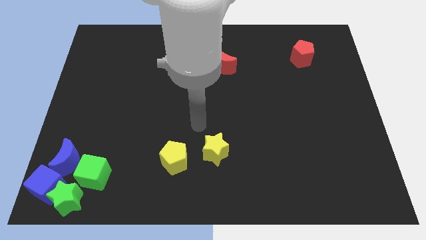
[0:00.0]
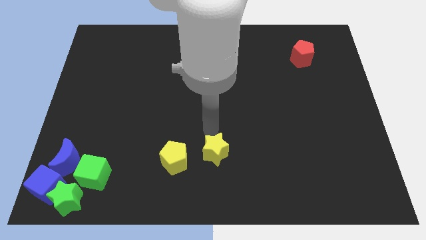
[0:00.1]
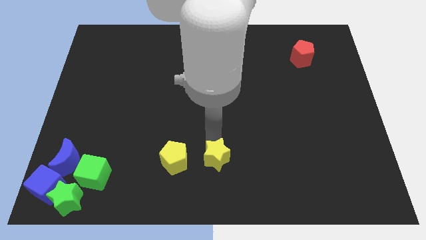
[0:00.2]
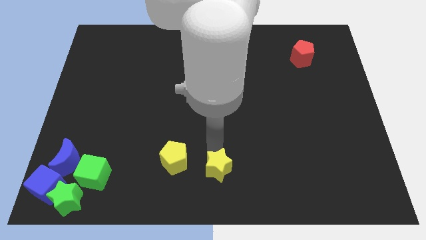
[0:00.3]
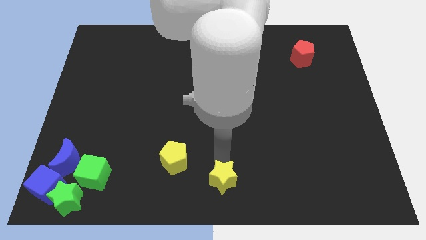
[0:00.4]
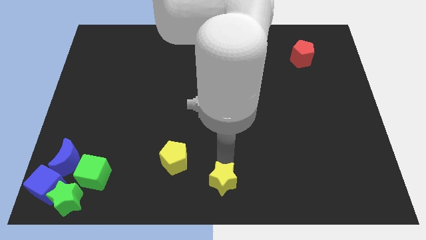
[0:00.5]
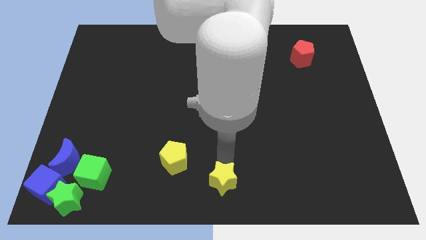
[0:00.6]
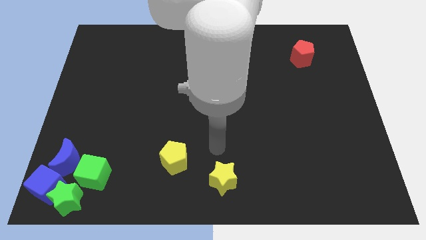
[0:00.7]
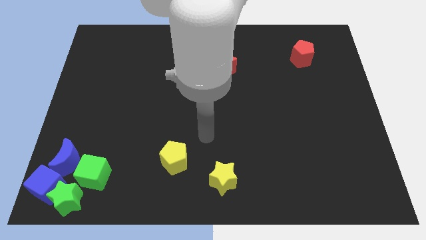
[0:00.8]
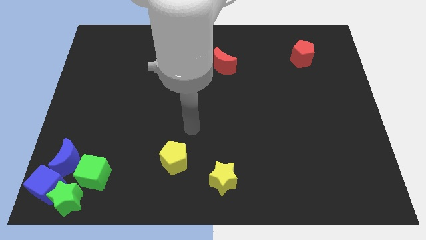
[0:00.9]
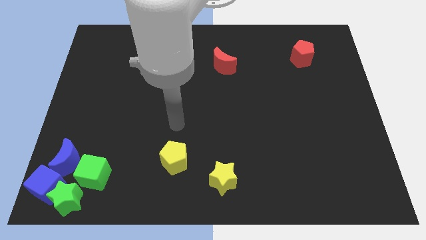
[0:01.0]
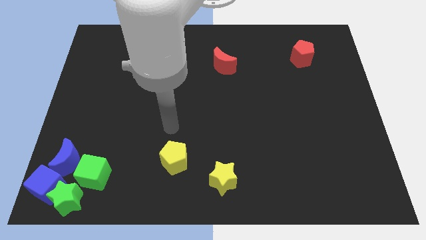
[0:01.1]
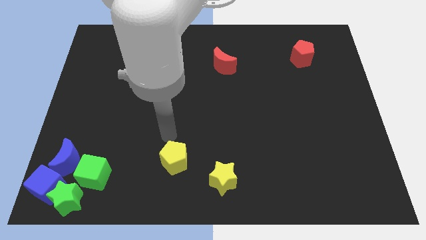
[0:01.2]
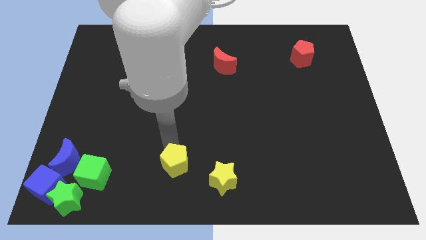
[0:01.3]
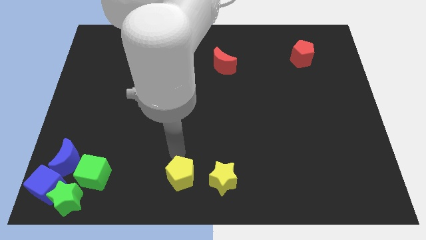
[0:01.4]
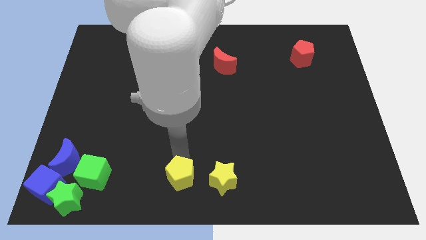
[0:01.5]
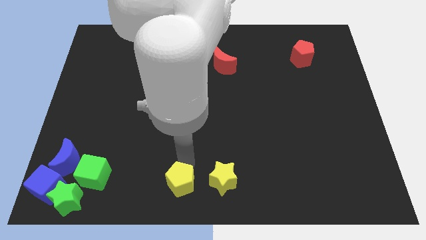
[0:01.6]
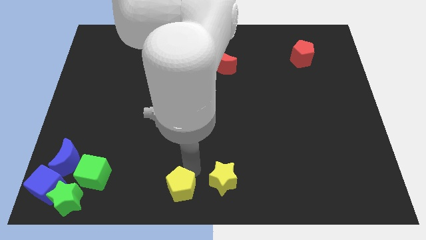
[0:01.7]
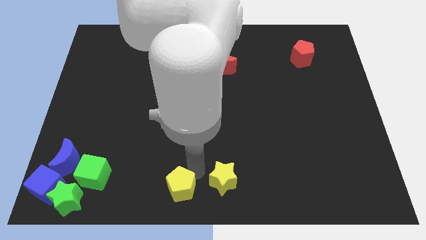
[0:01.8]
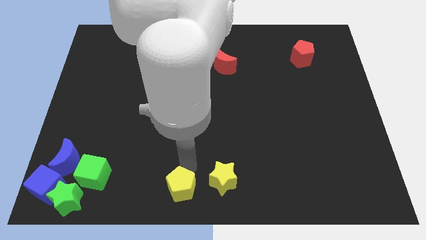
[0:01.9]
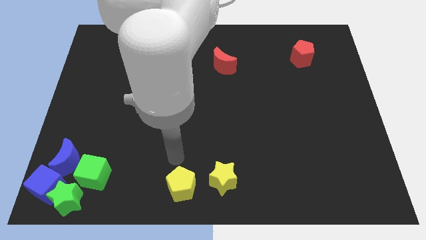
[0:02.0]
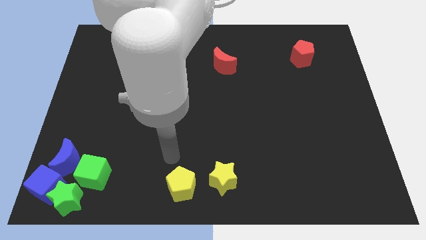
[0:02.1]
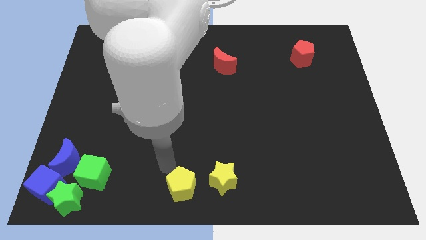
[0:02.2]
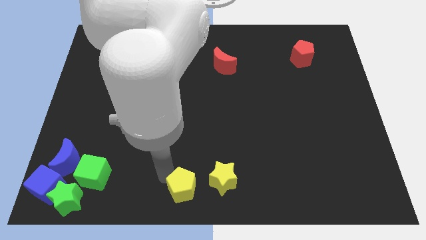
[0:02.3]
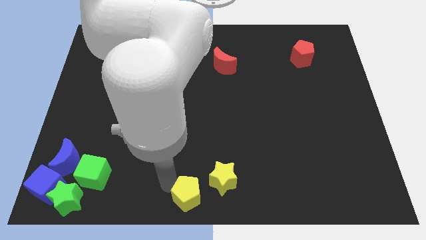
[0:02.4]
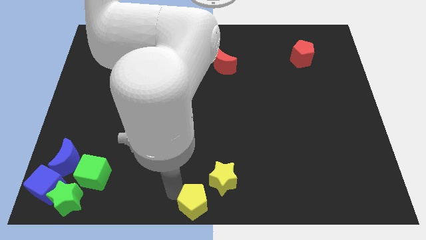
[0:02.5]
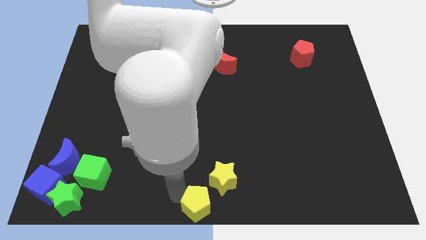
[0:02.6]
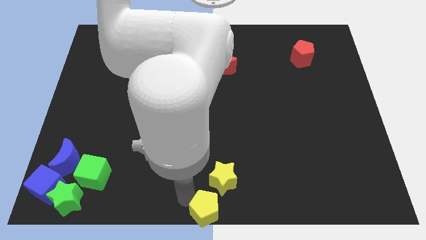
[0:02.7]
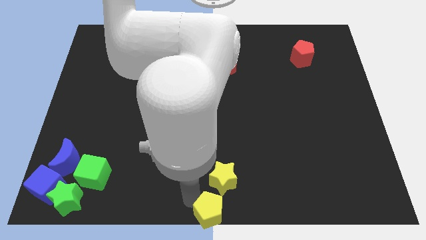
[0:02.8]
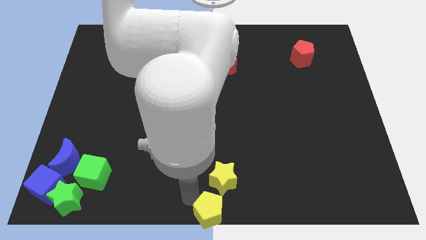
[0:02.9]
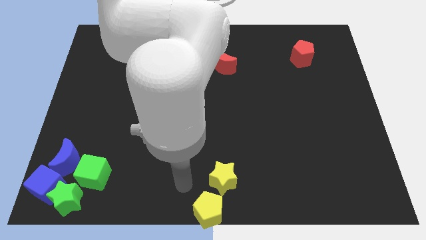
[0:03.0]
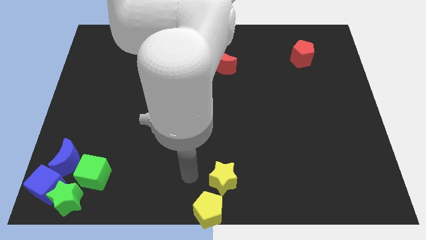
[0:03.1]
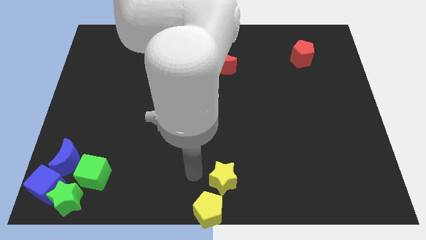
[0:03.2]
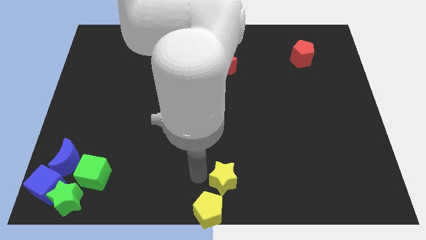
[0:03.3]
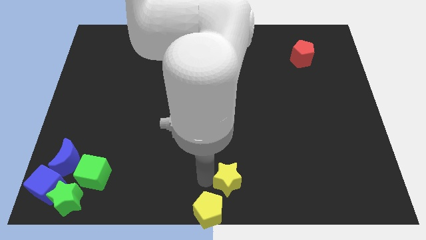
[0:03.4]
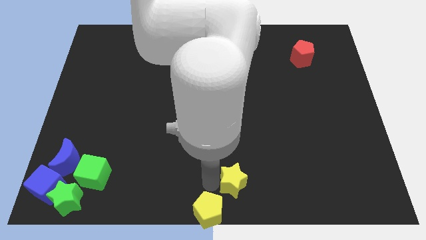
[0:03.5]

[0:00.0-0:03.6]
place the yellow pentagon to the bottom center

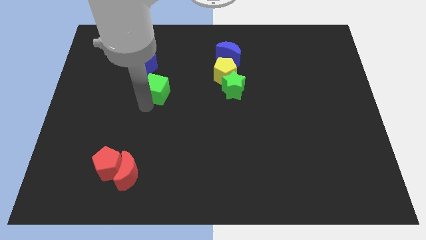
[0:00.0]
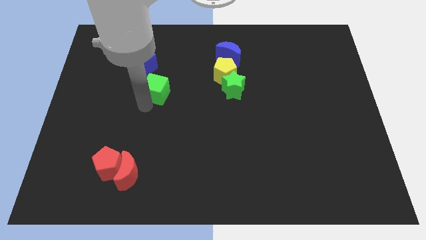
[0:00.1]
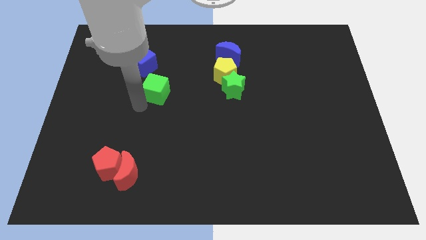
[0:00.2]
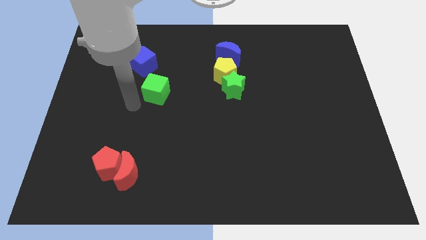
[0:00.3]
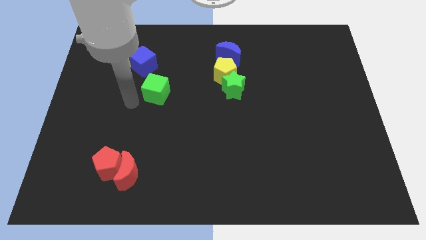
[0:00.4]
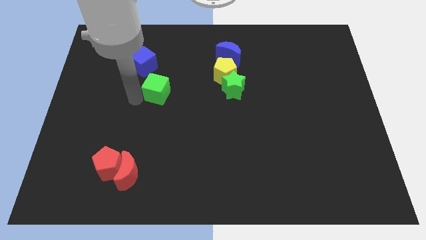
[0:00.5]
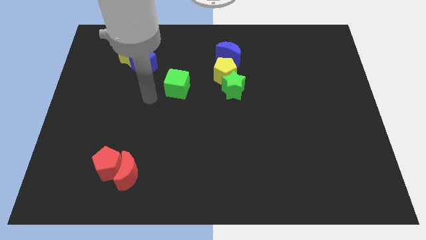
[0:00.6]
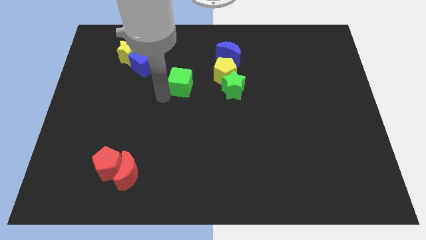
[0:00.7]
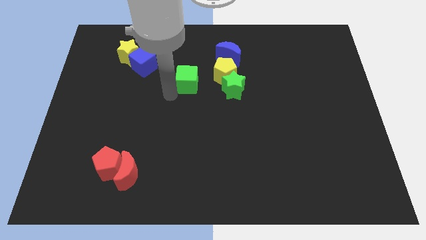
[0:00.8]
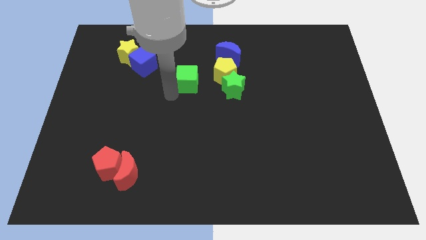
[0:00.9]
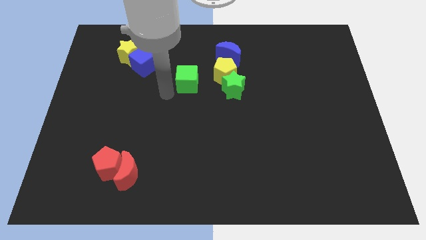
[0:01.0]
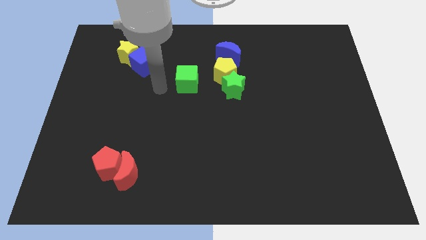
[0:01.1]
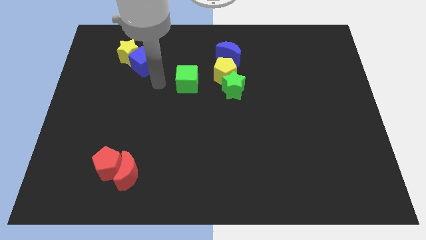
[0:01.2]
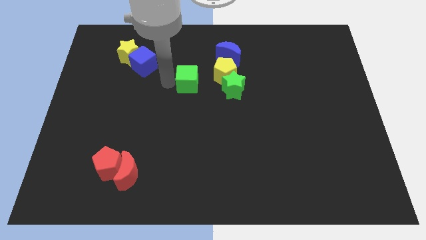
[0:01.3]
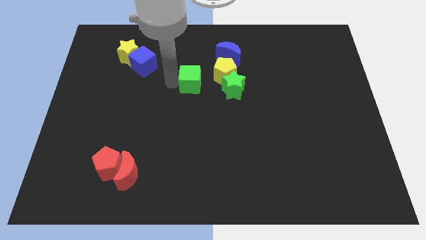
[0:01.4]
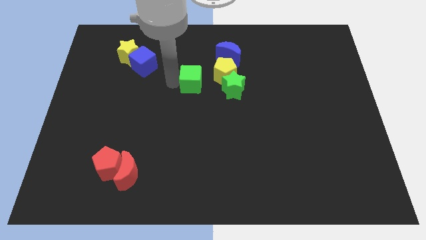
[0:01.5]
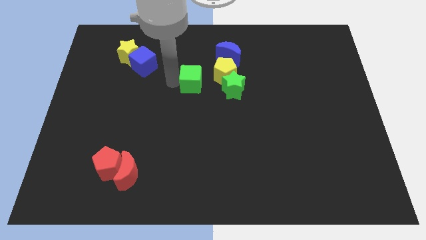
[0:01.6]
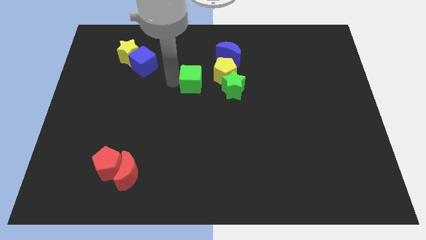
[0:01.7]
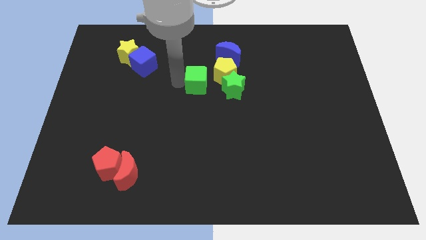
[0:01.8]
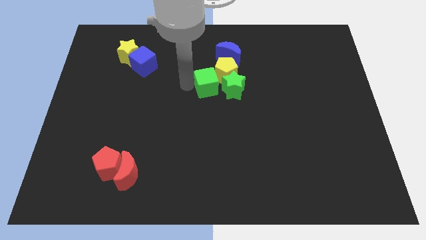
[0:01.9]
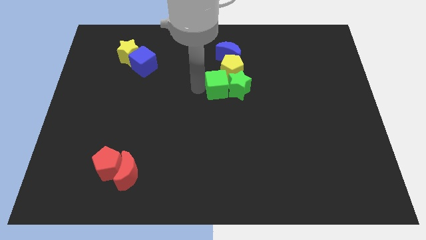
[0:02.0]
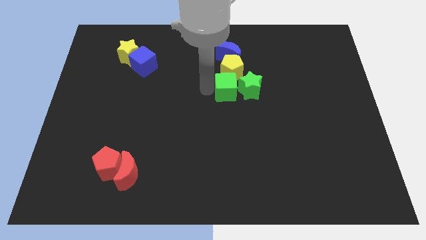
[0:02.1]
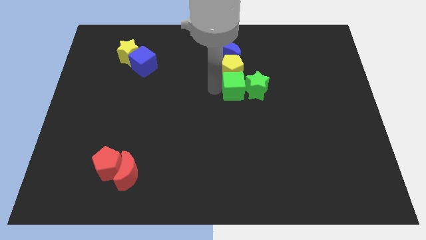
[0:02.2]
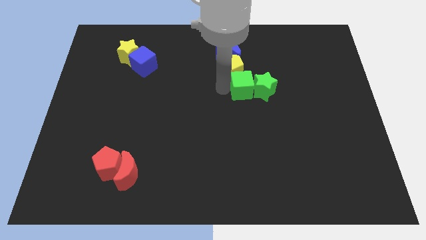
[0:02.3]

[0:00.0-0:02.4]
move the green blocks slightly to left

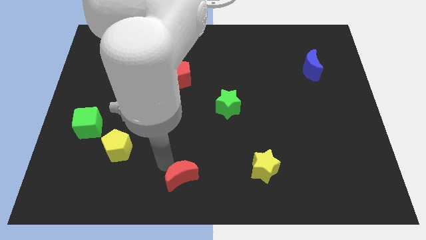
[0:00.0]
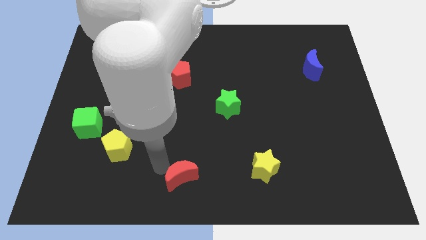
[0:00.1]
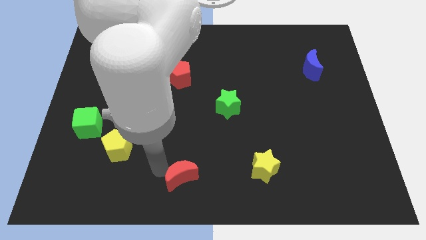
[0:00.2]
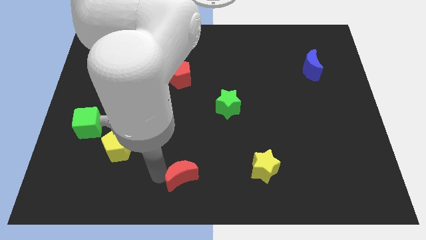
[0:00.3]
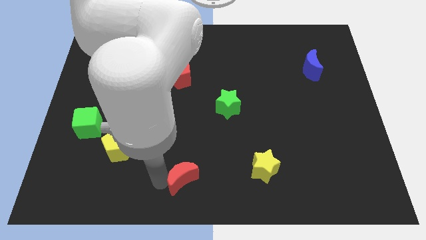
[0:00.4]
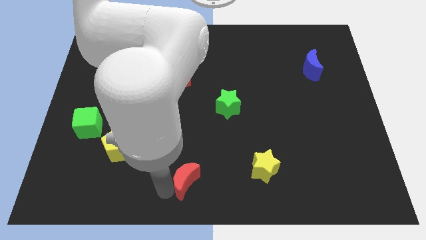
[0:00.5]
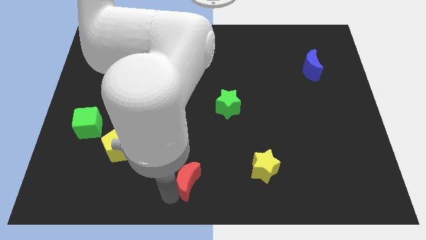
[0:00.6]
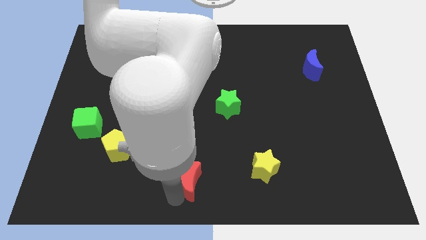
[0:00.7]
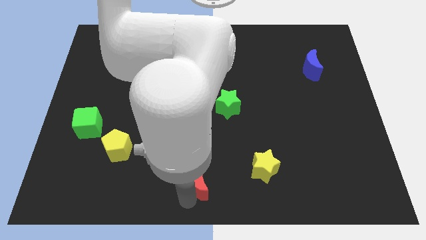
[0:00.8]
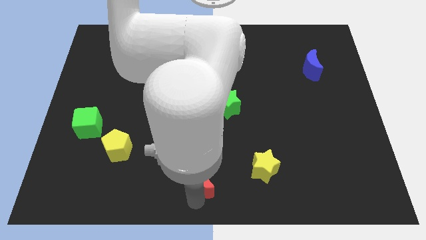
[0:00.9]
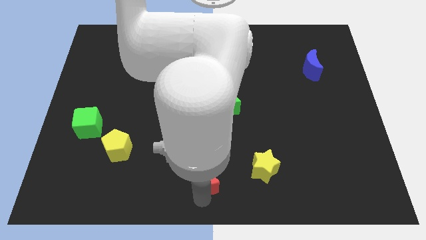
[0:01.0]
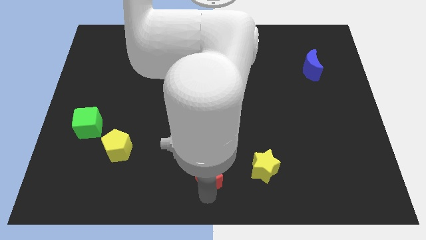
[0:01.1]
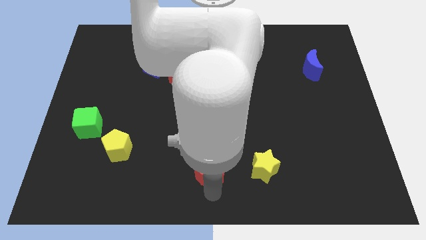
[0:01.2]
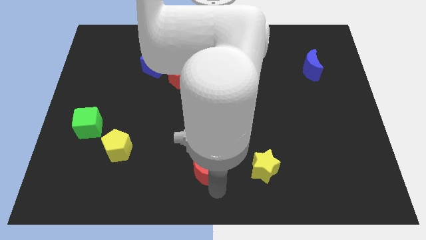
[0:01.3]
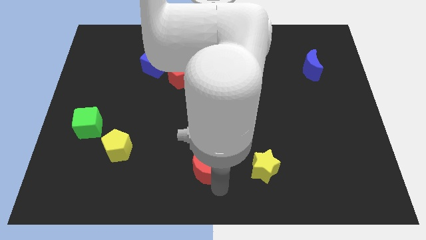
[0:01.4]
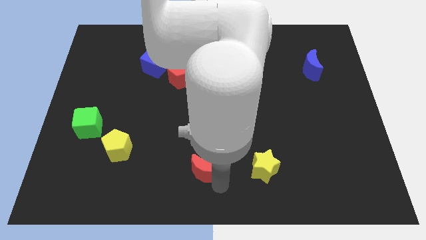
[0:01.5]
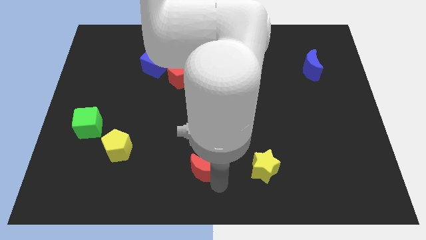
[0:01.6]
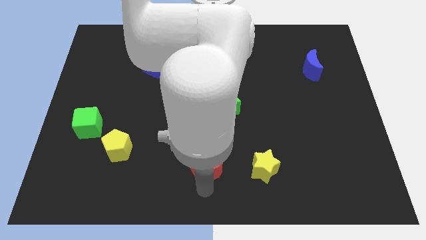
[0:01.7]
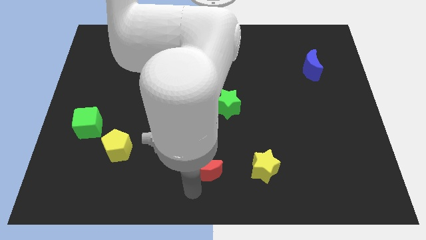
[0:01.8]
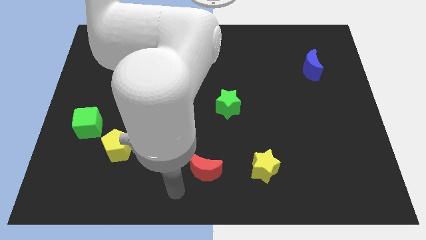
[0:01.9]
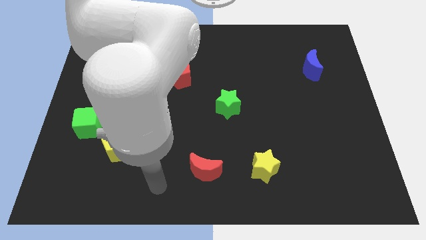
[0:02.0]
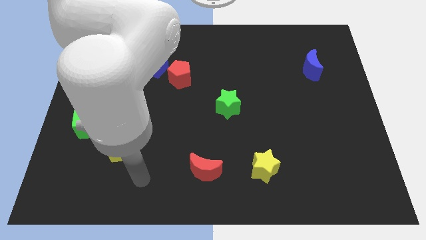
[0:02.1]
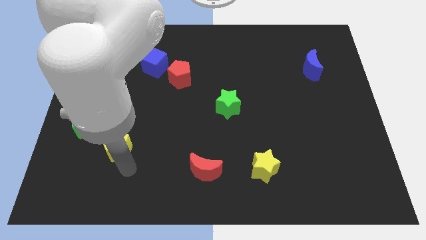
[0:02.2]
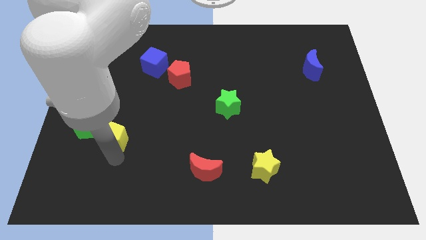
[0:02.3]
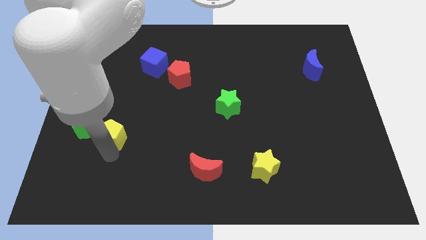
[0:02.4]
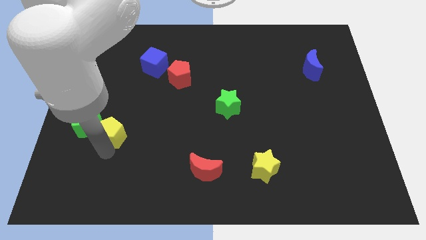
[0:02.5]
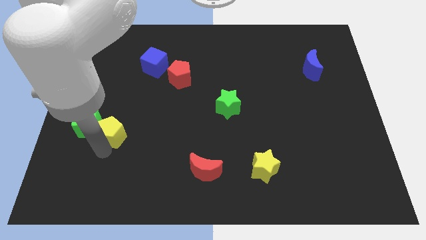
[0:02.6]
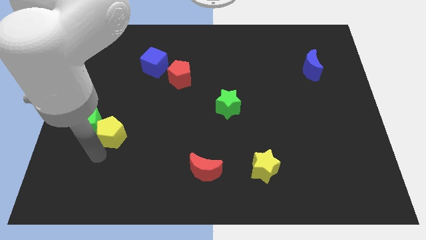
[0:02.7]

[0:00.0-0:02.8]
put the red moon left to the yellow star

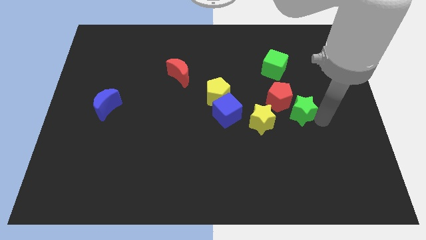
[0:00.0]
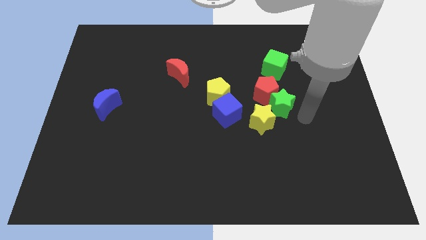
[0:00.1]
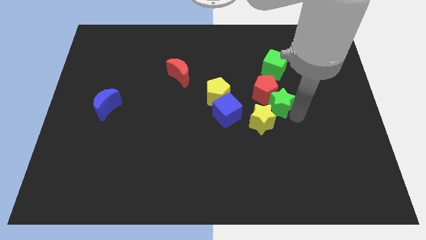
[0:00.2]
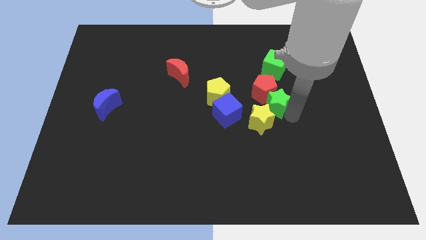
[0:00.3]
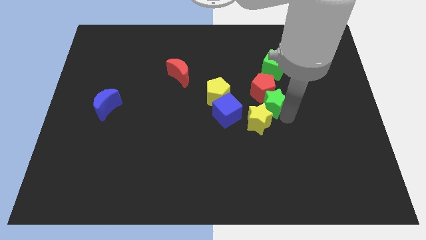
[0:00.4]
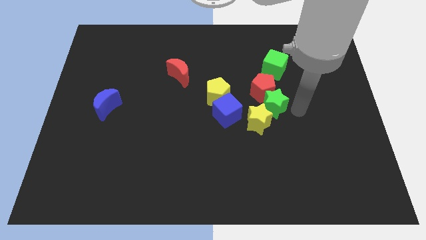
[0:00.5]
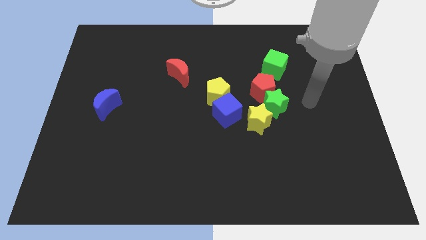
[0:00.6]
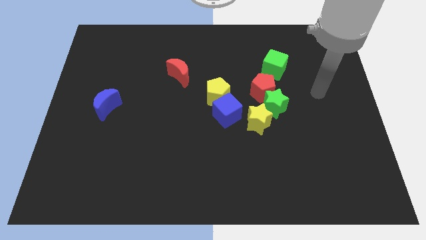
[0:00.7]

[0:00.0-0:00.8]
push the green star above the yellow star
